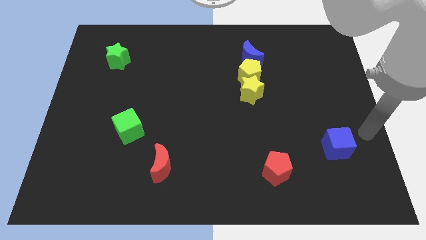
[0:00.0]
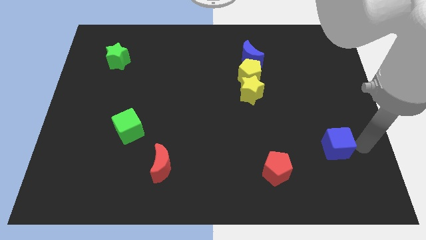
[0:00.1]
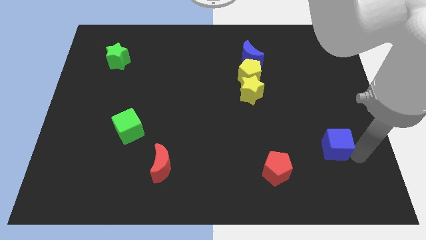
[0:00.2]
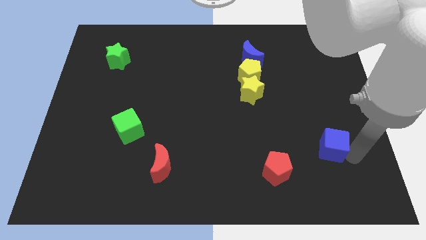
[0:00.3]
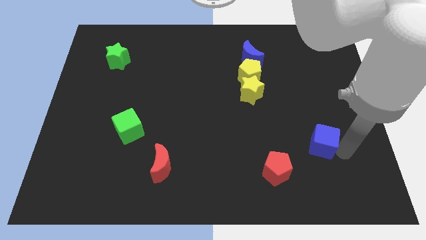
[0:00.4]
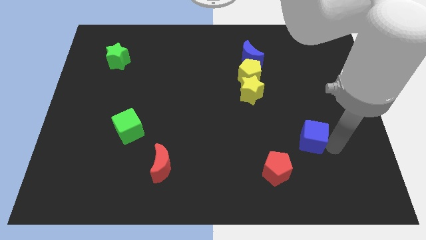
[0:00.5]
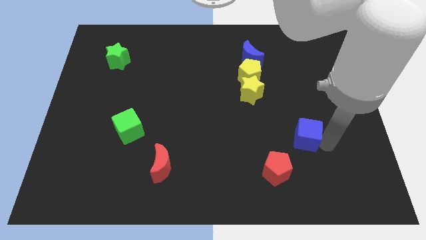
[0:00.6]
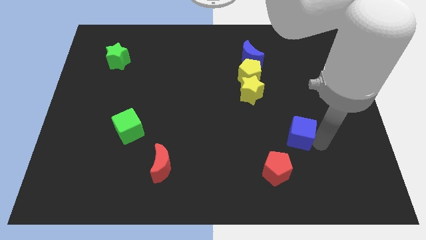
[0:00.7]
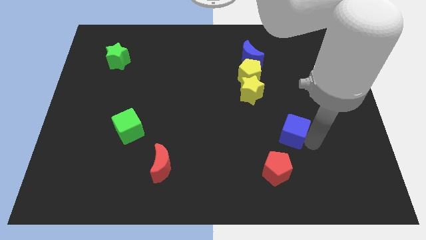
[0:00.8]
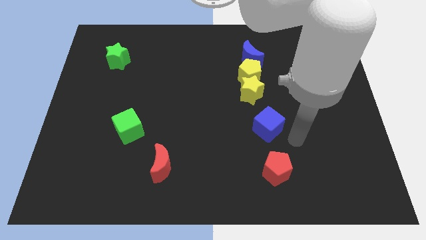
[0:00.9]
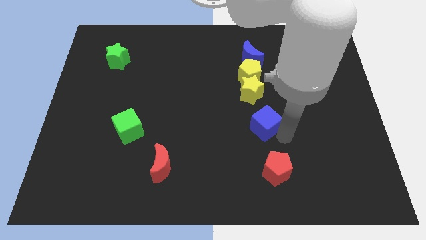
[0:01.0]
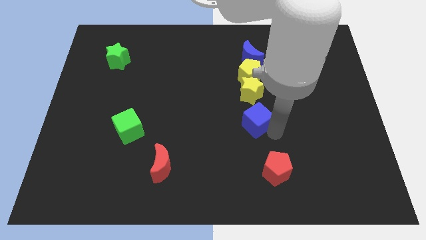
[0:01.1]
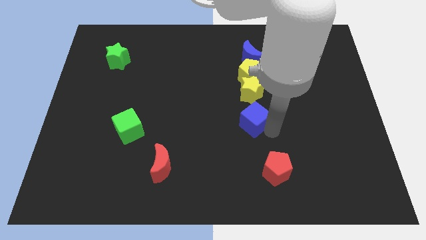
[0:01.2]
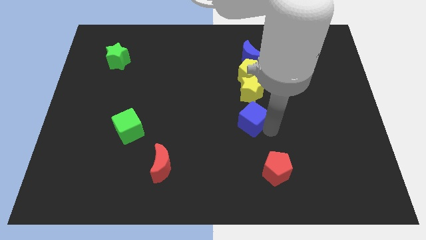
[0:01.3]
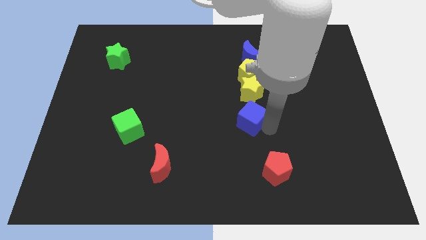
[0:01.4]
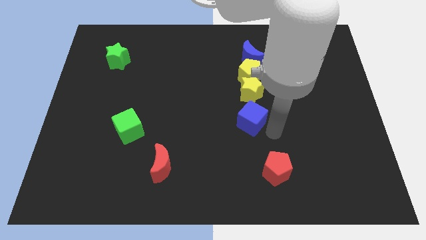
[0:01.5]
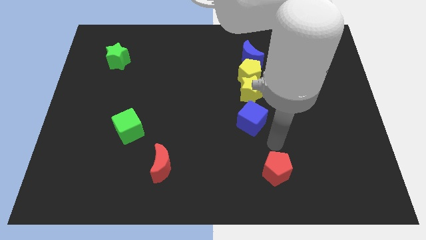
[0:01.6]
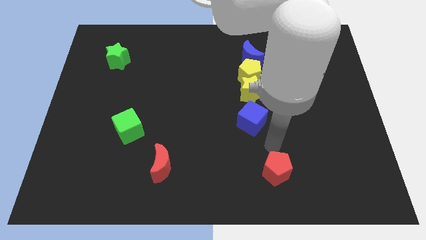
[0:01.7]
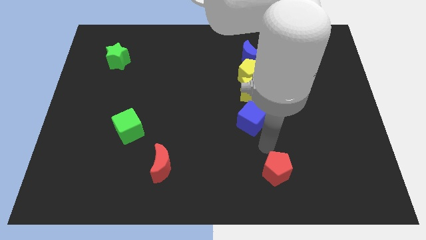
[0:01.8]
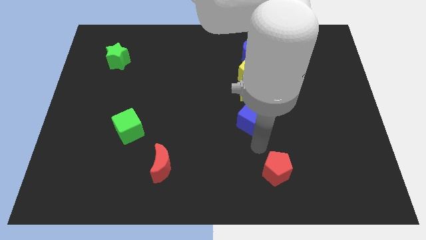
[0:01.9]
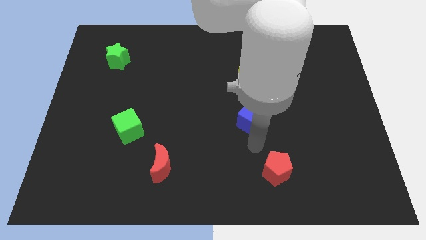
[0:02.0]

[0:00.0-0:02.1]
slide the blue cube to the bottom of yellow star

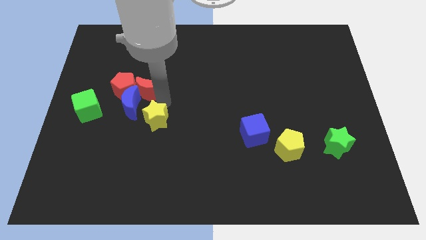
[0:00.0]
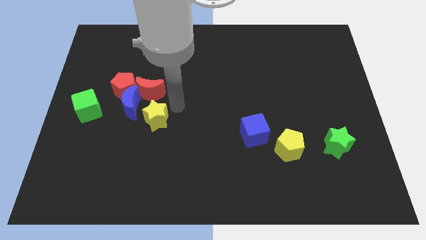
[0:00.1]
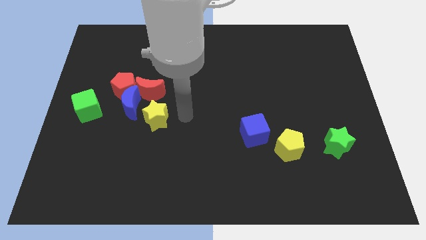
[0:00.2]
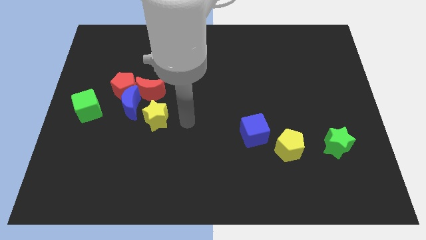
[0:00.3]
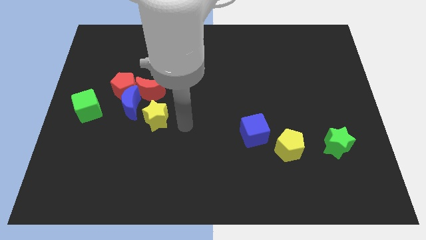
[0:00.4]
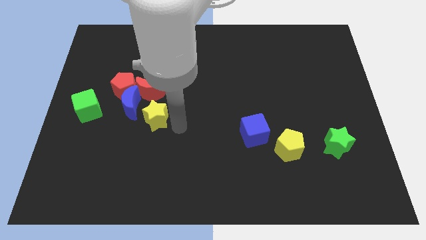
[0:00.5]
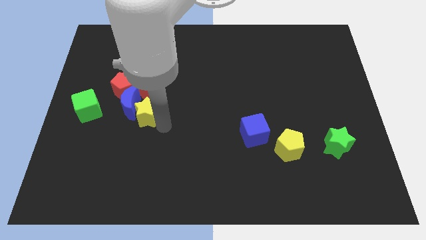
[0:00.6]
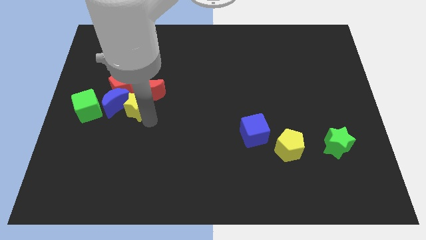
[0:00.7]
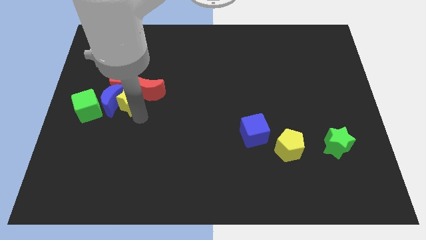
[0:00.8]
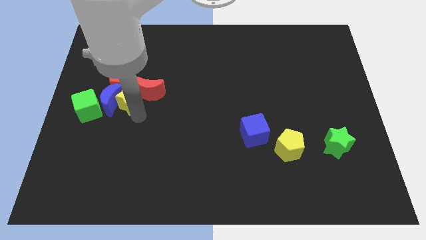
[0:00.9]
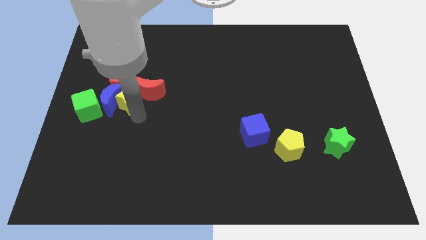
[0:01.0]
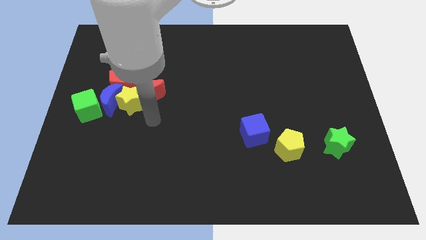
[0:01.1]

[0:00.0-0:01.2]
move the yellow star in to the blue crescent

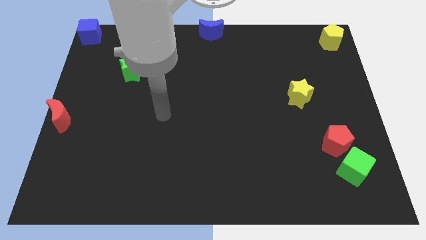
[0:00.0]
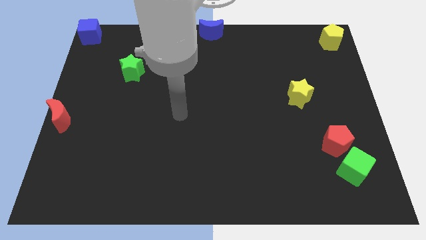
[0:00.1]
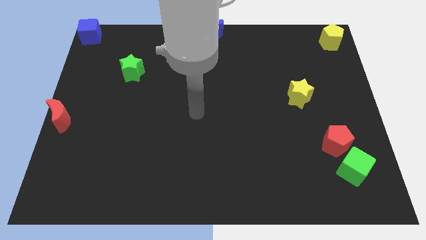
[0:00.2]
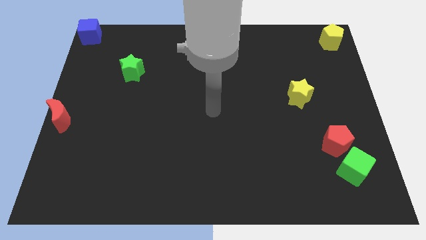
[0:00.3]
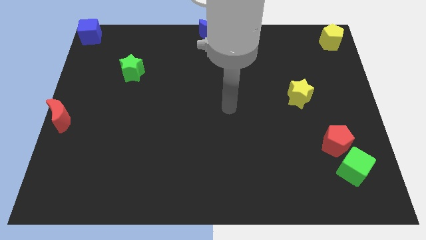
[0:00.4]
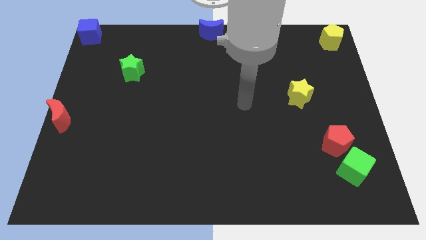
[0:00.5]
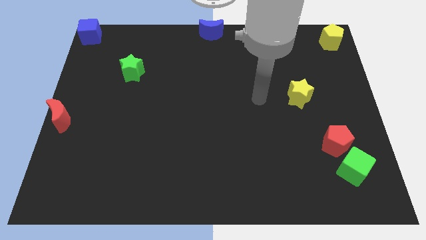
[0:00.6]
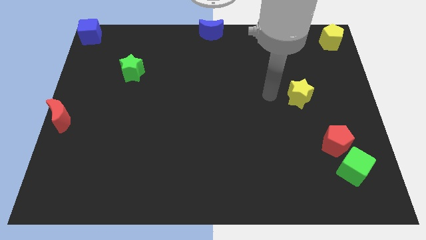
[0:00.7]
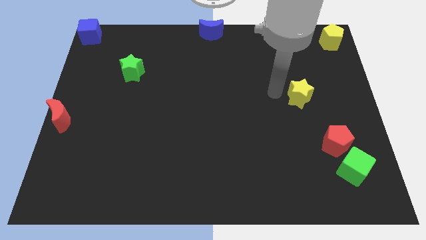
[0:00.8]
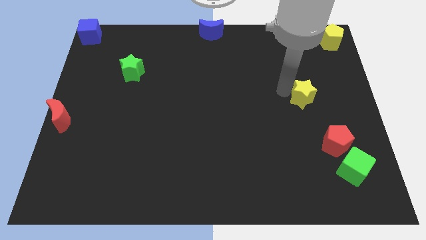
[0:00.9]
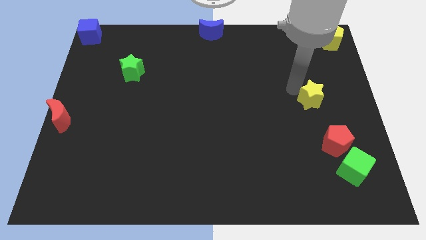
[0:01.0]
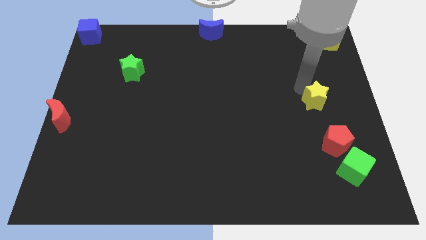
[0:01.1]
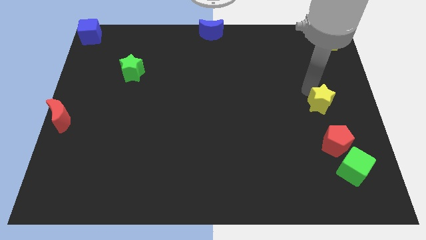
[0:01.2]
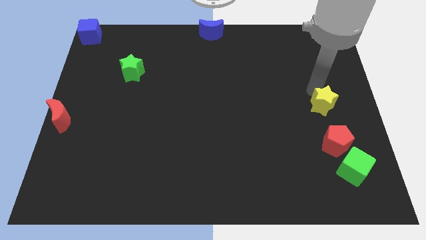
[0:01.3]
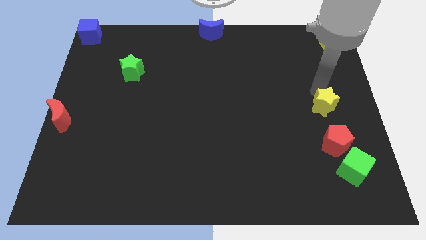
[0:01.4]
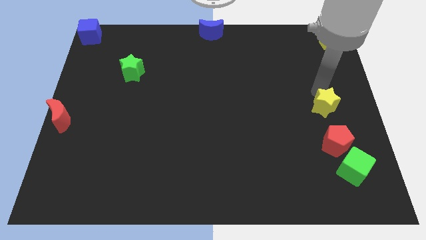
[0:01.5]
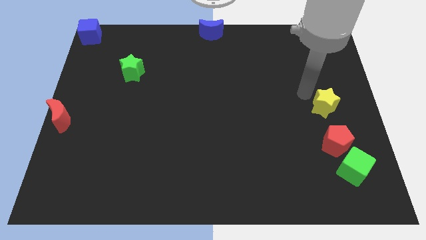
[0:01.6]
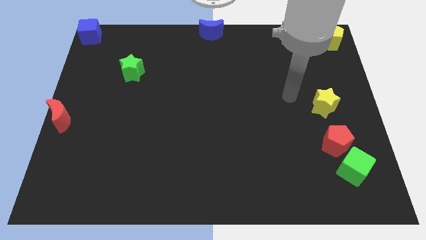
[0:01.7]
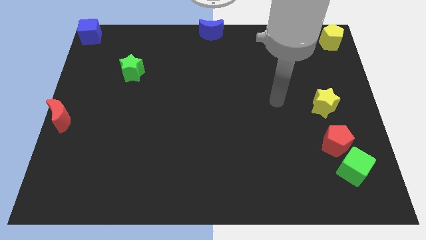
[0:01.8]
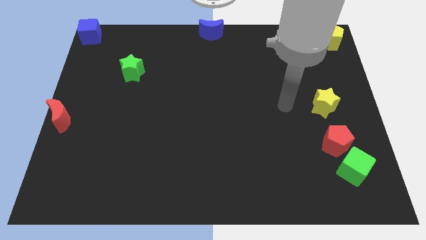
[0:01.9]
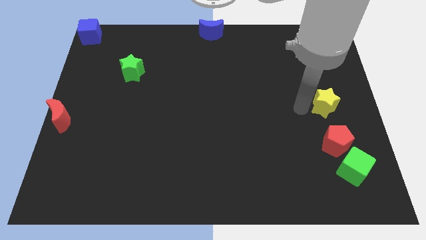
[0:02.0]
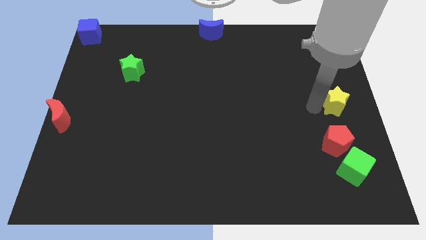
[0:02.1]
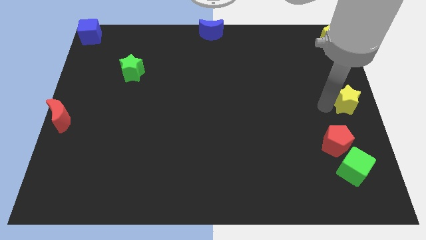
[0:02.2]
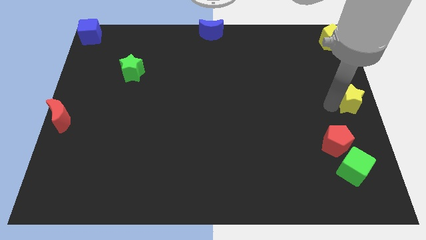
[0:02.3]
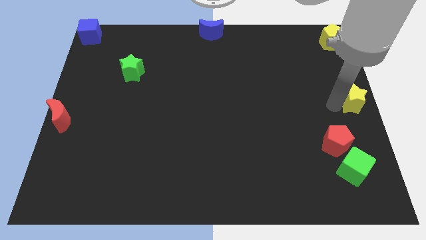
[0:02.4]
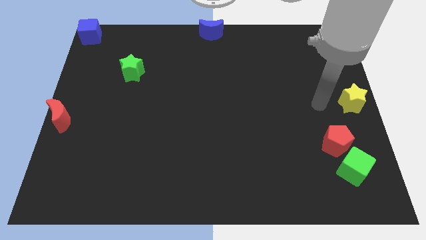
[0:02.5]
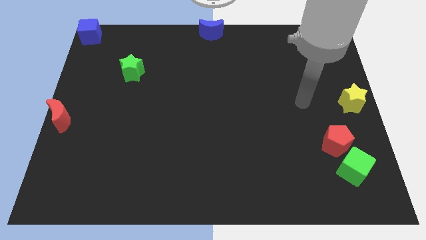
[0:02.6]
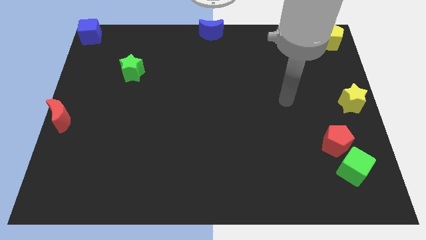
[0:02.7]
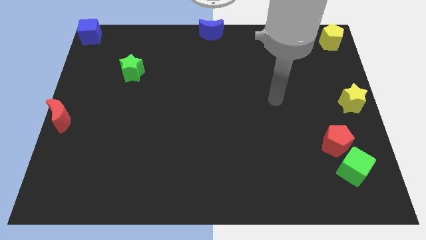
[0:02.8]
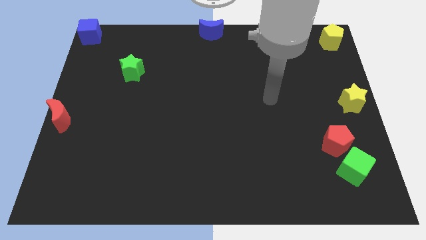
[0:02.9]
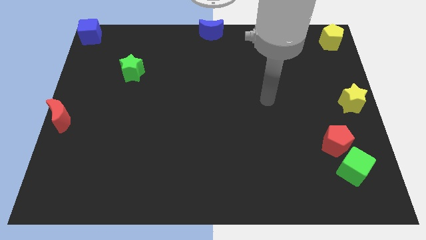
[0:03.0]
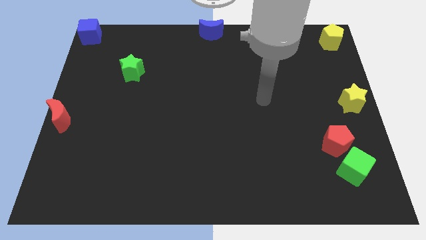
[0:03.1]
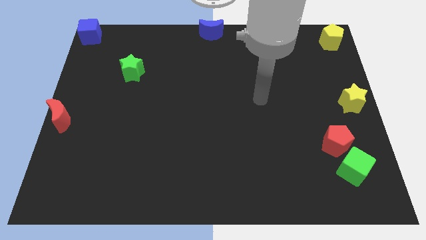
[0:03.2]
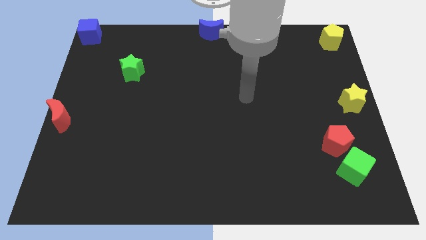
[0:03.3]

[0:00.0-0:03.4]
move the yellow star to center right

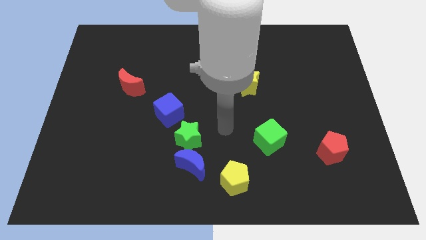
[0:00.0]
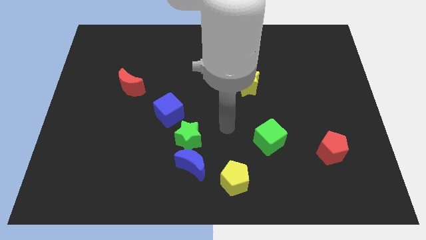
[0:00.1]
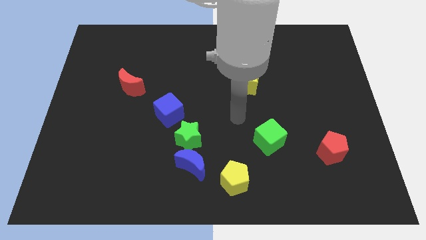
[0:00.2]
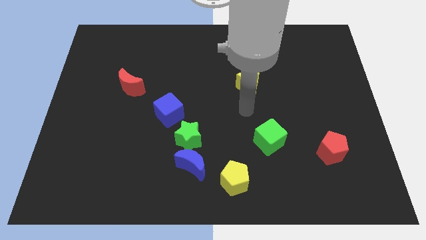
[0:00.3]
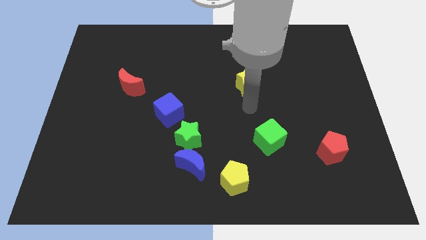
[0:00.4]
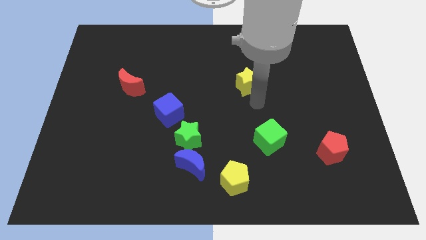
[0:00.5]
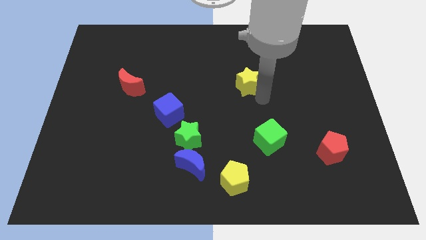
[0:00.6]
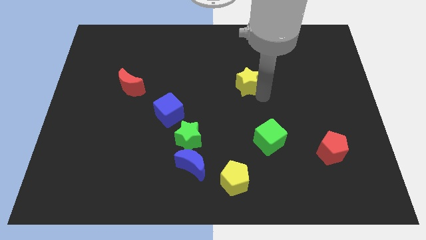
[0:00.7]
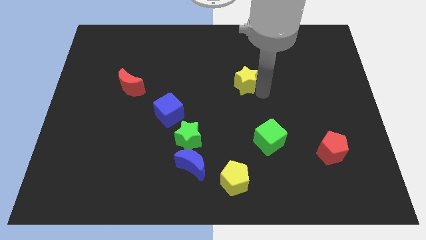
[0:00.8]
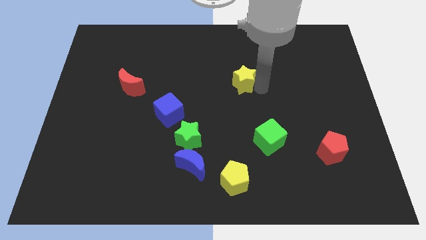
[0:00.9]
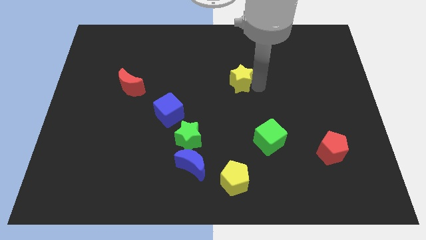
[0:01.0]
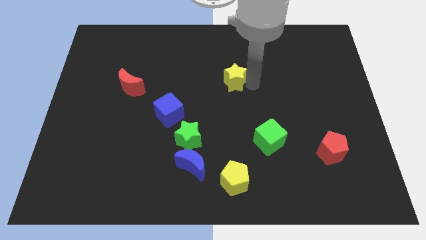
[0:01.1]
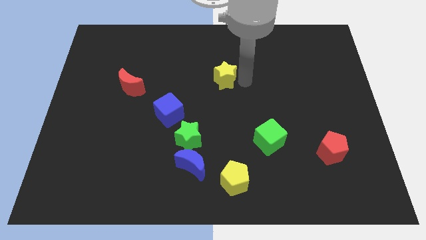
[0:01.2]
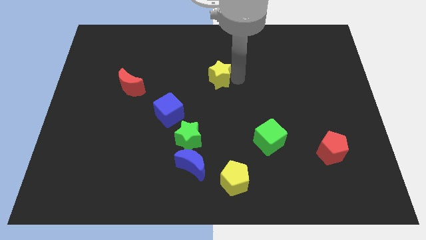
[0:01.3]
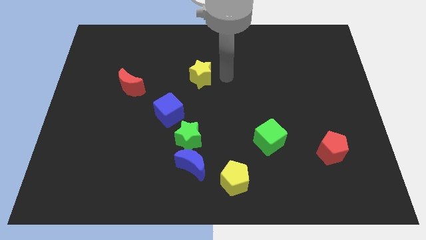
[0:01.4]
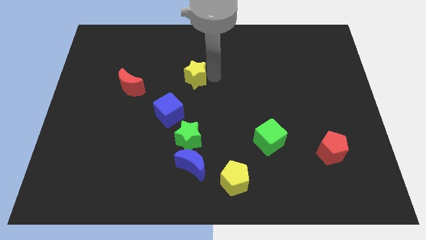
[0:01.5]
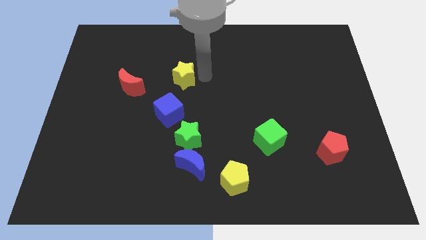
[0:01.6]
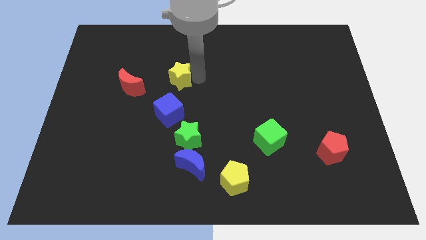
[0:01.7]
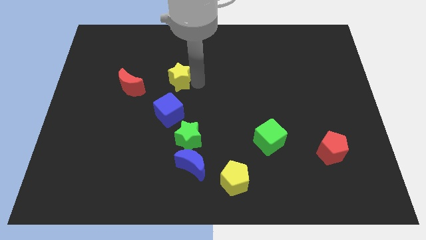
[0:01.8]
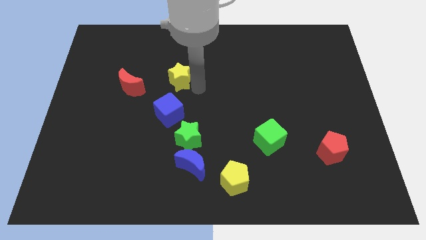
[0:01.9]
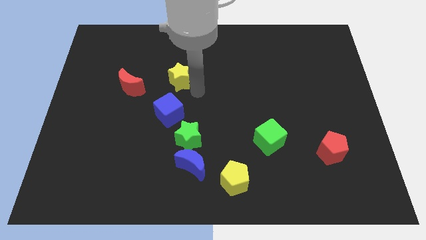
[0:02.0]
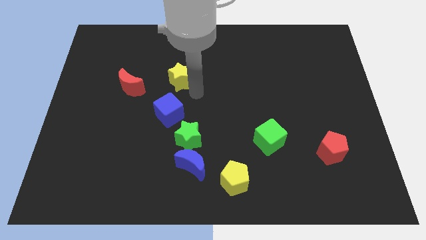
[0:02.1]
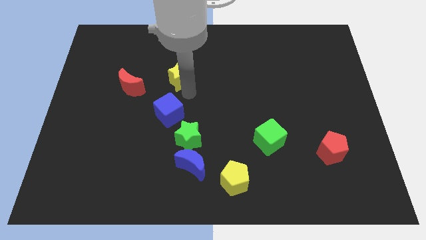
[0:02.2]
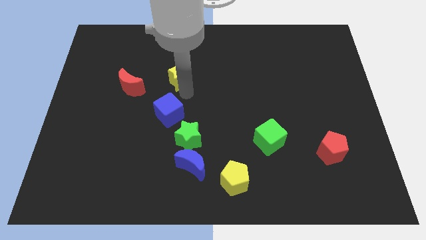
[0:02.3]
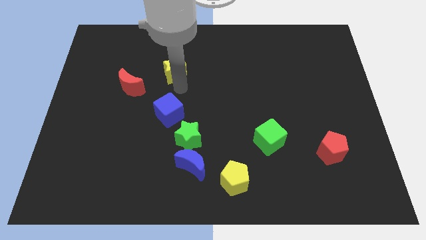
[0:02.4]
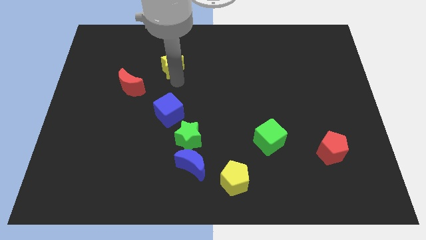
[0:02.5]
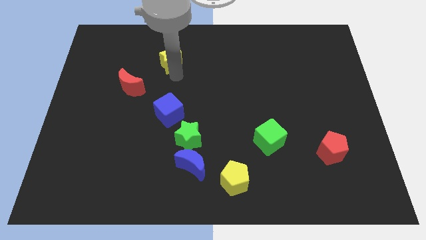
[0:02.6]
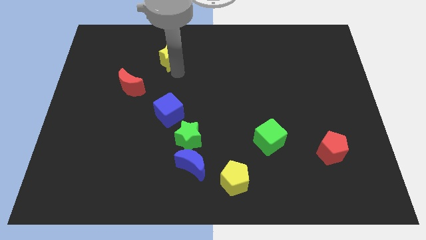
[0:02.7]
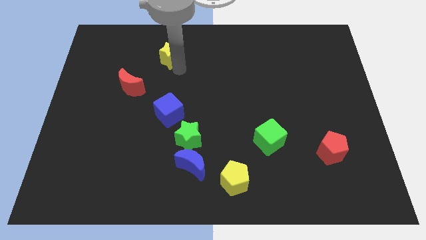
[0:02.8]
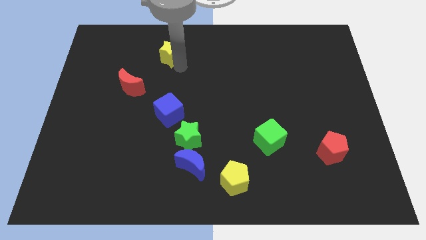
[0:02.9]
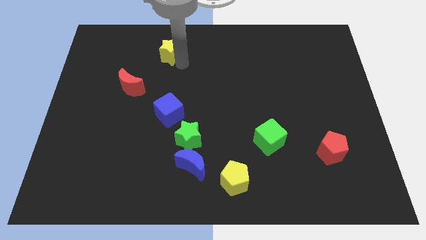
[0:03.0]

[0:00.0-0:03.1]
move the yellow star slightly towards the top left of the board
